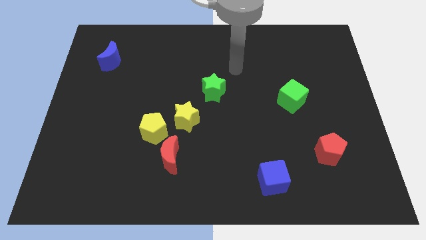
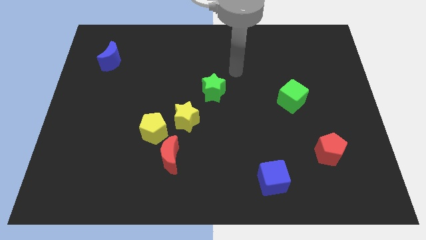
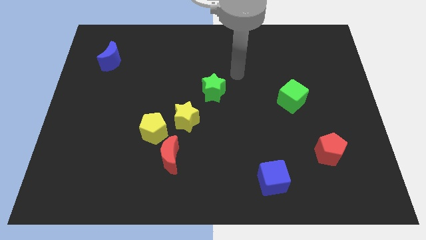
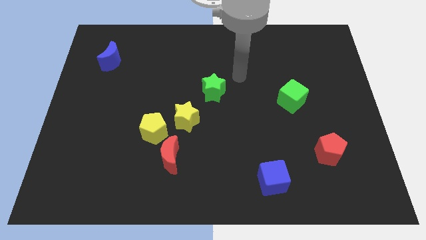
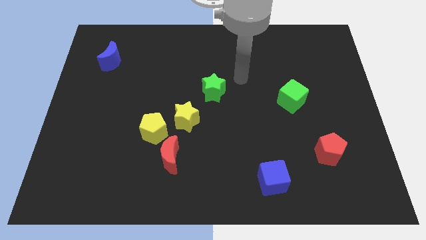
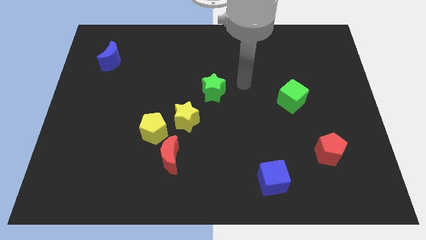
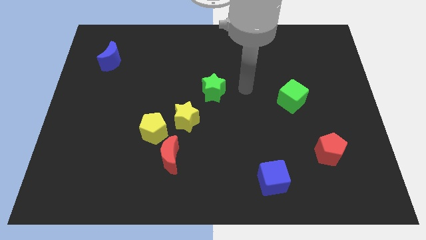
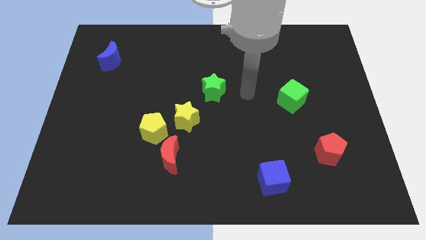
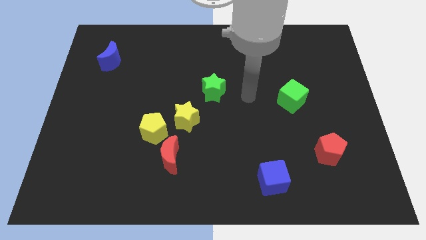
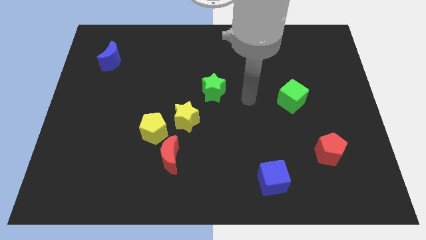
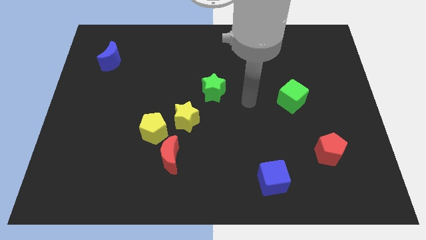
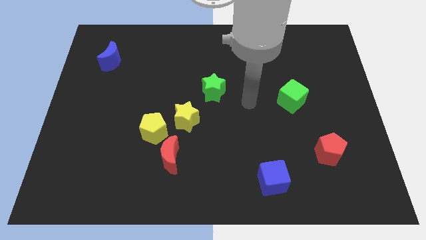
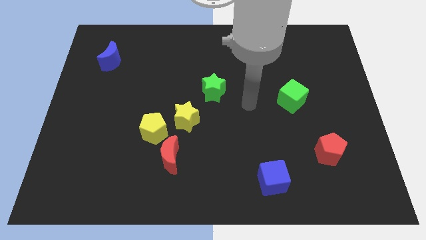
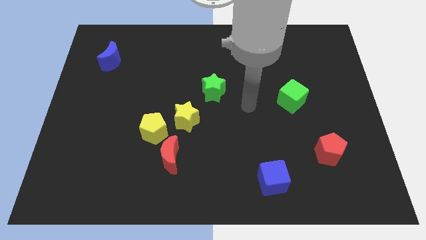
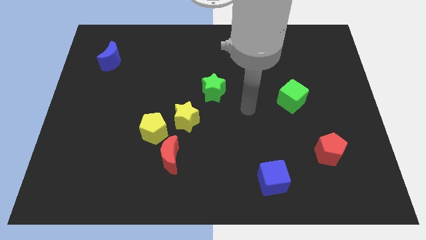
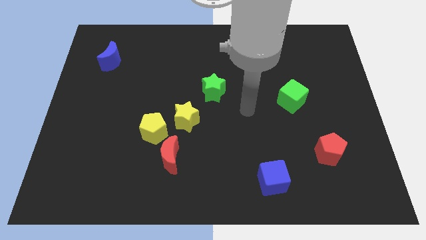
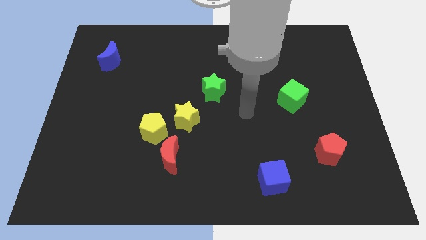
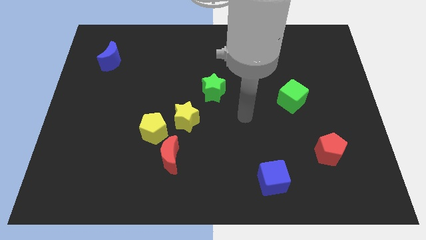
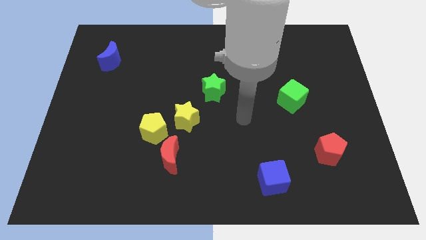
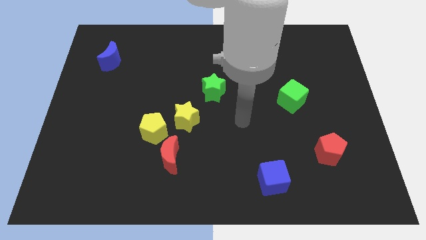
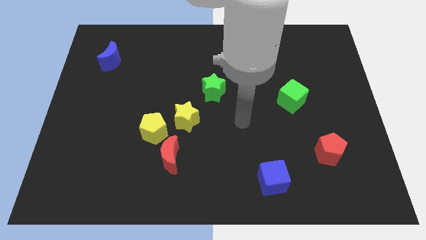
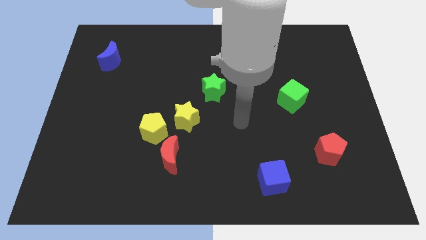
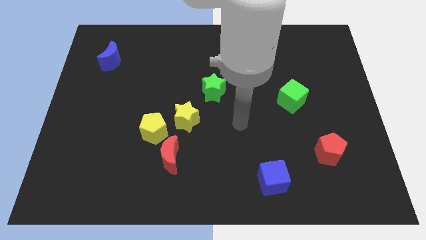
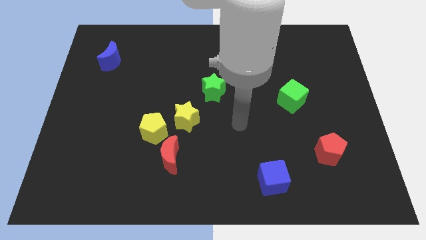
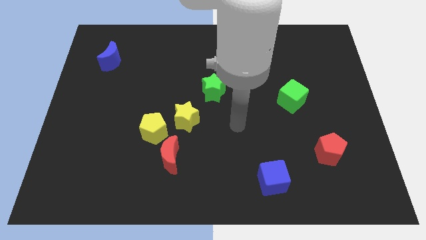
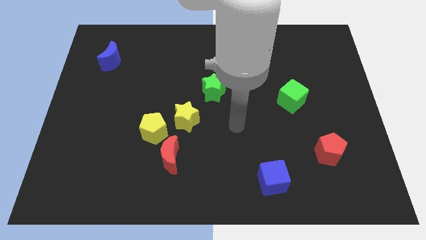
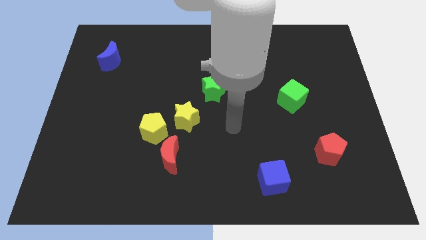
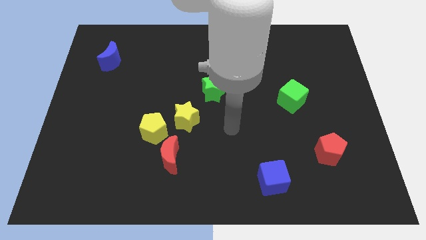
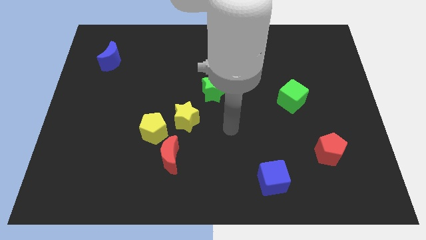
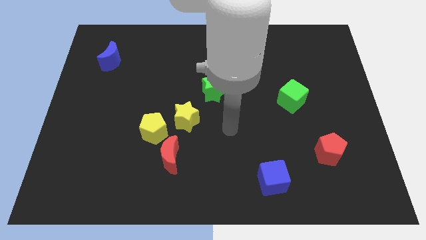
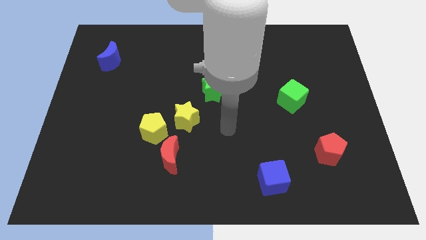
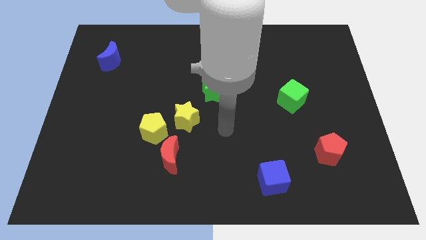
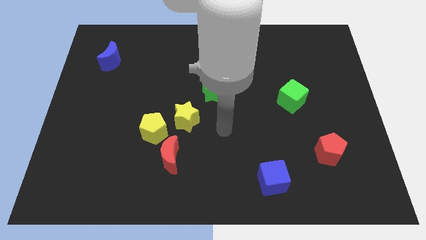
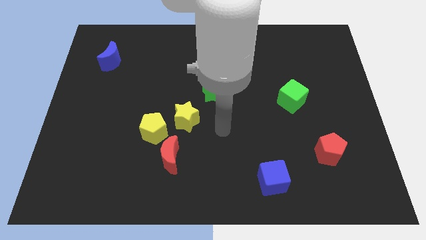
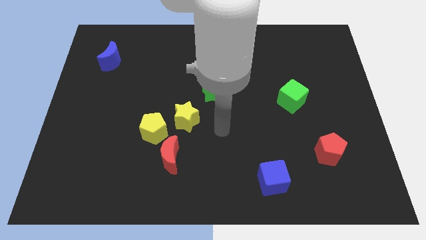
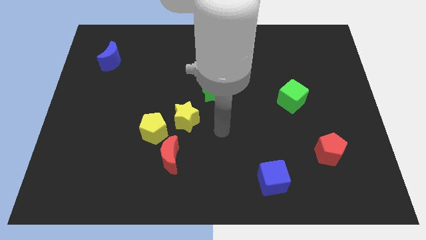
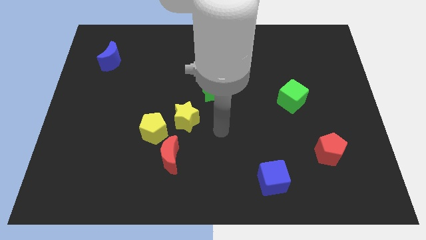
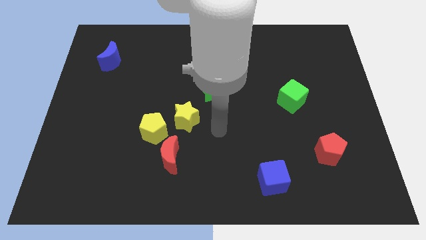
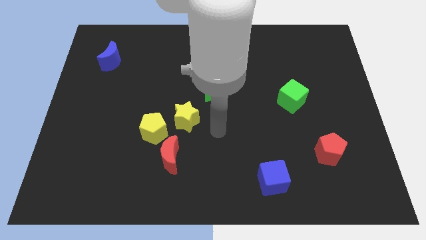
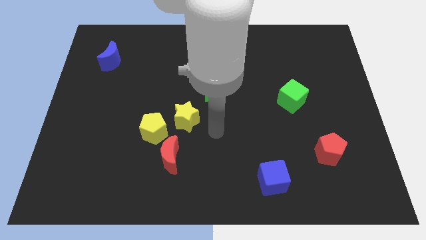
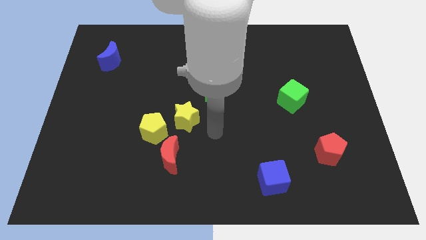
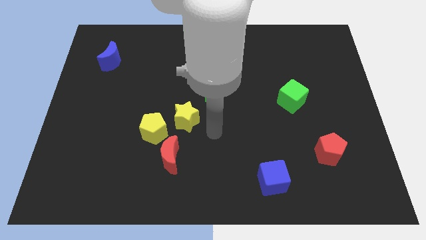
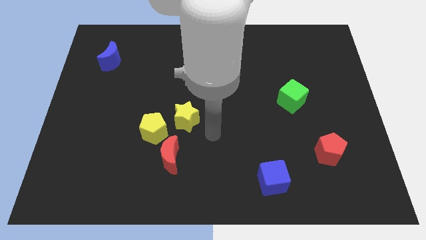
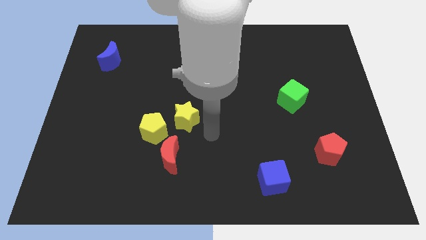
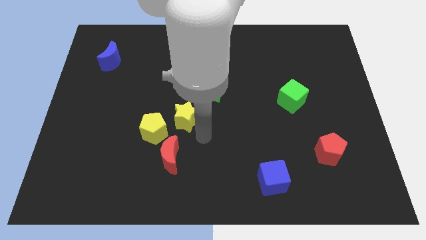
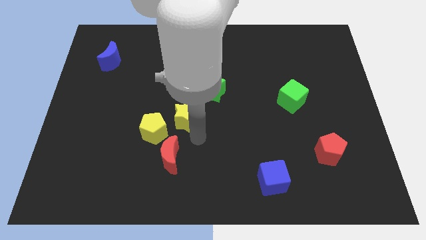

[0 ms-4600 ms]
move your arm towards the yellow star

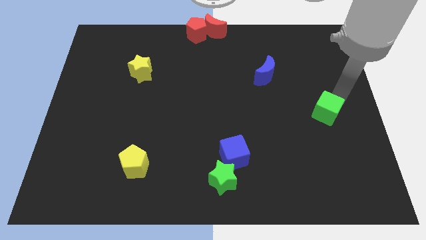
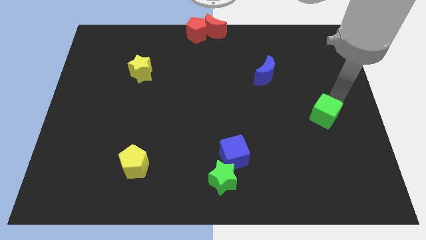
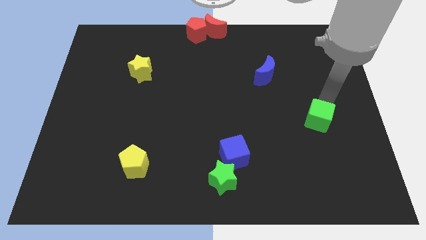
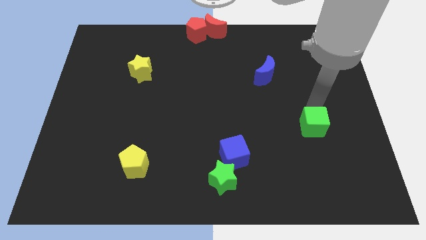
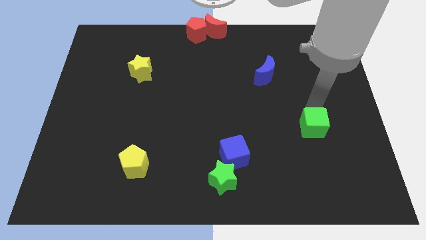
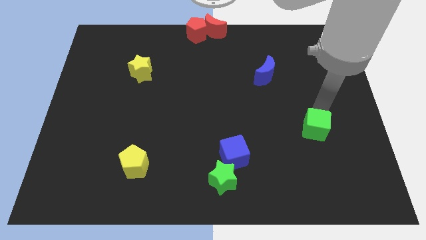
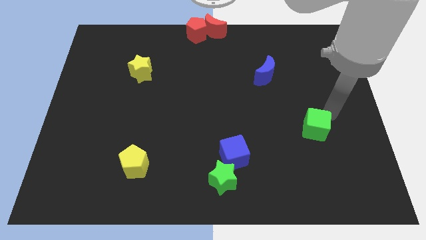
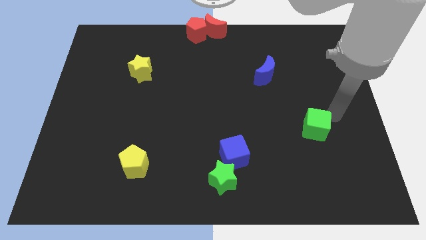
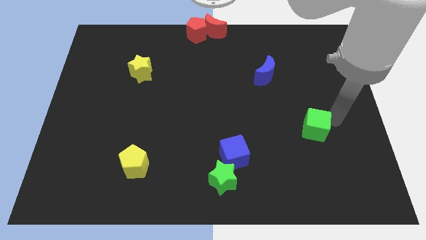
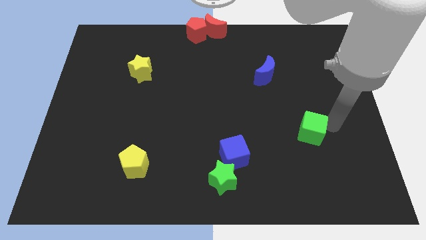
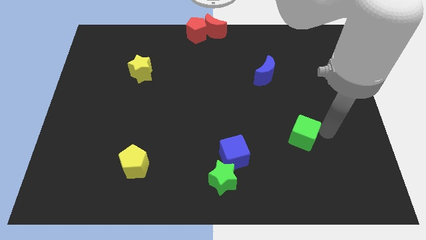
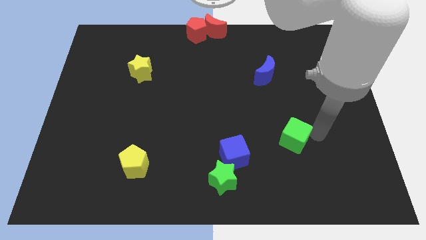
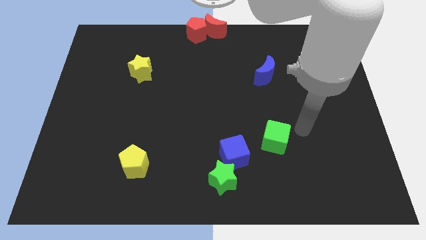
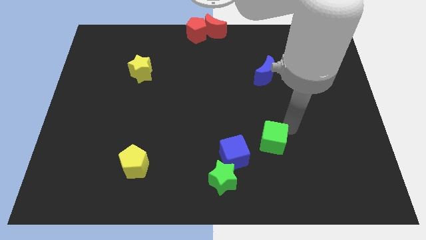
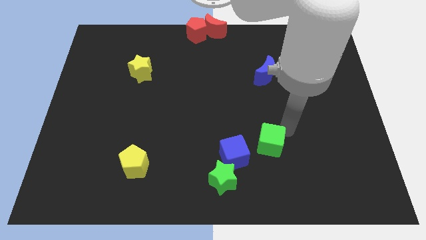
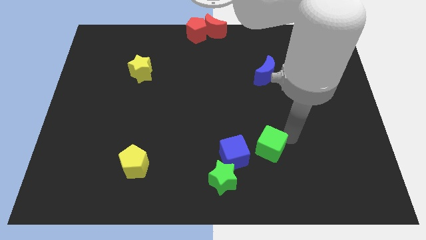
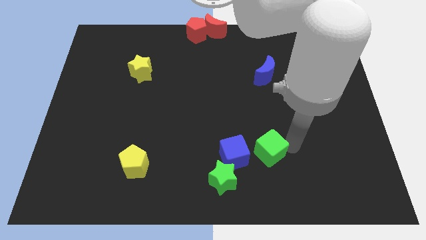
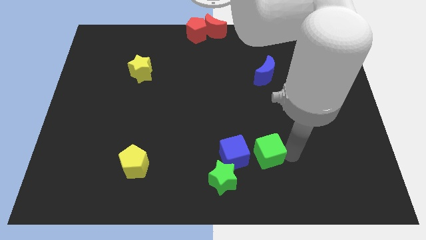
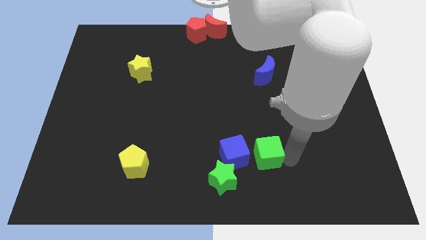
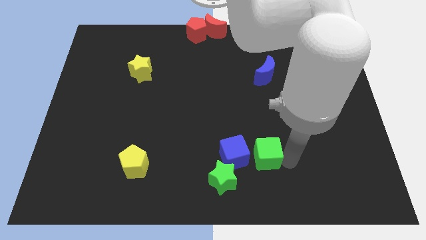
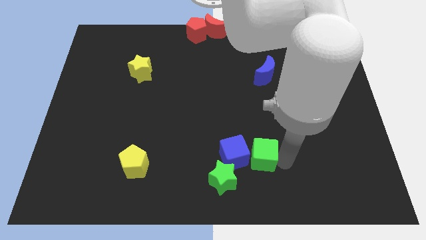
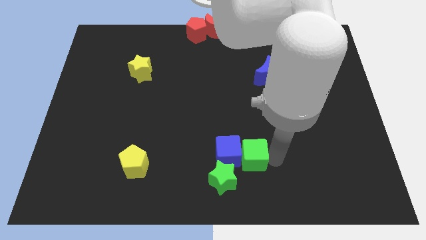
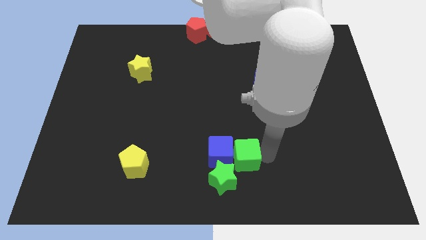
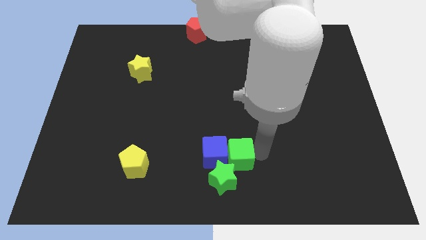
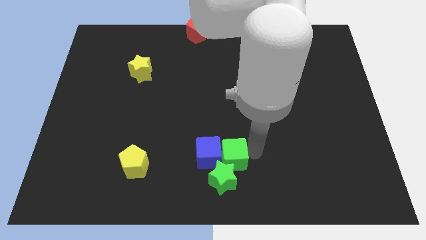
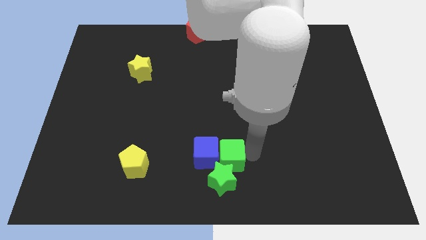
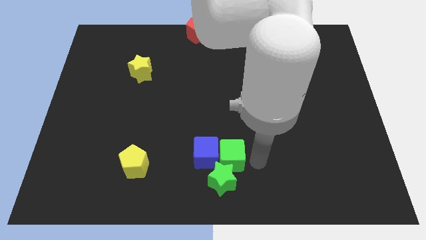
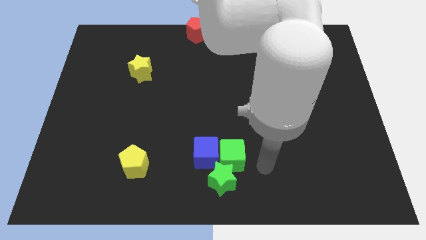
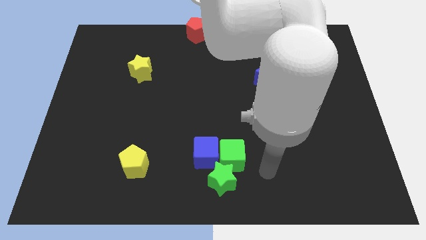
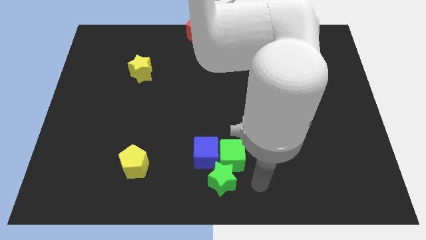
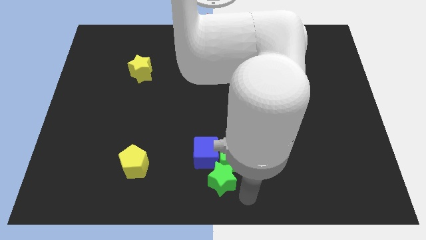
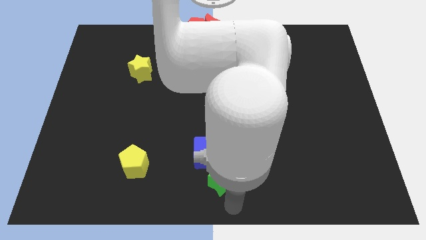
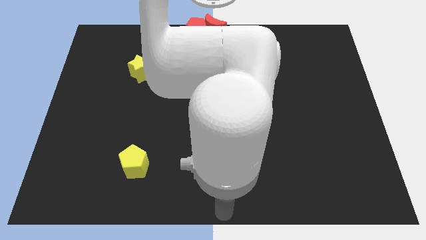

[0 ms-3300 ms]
move green cube into blue cube

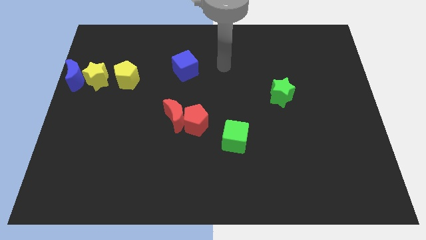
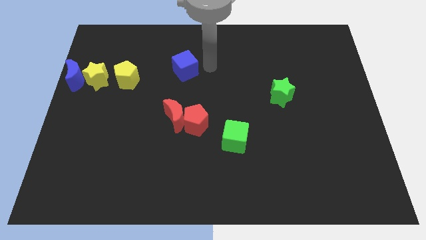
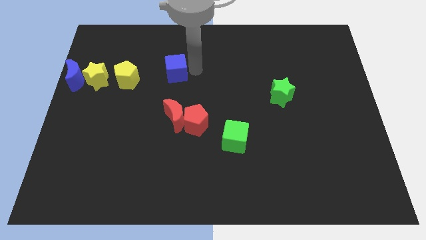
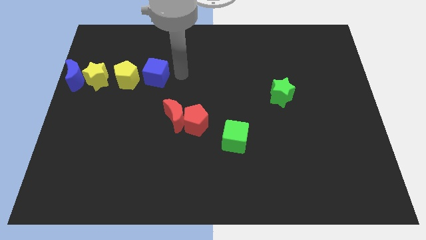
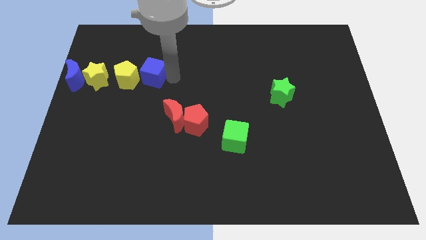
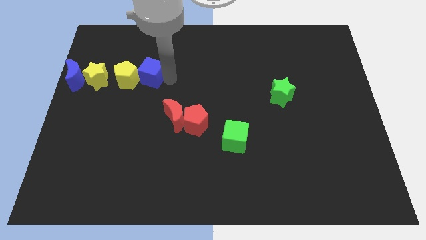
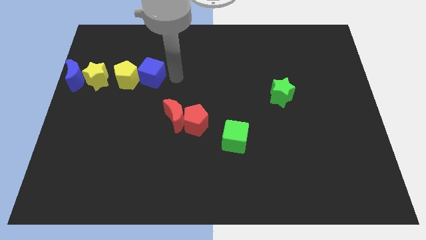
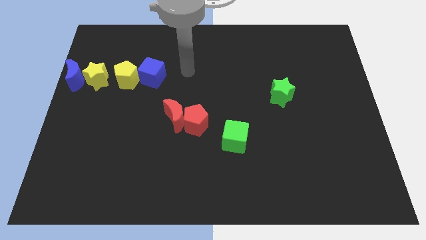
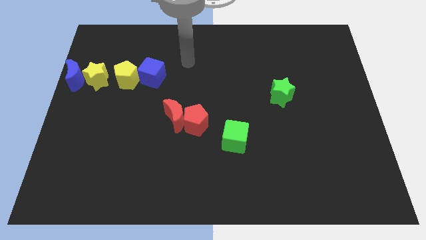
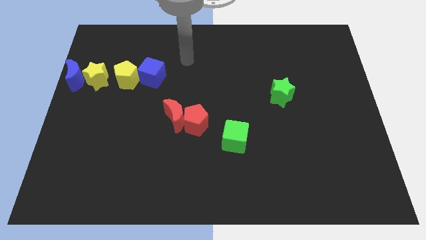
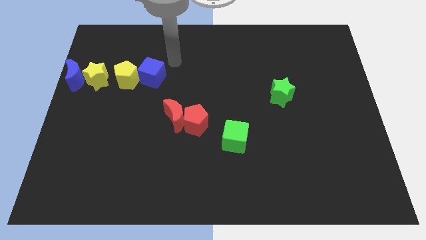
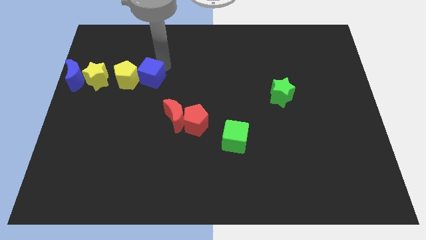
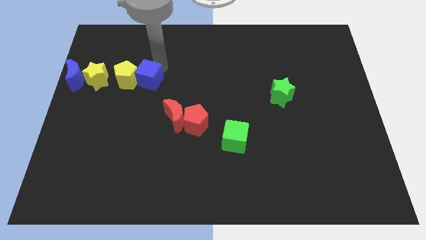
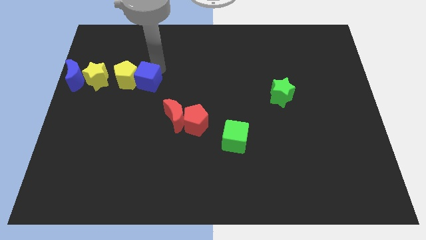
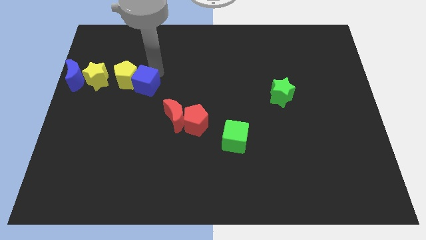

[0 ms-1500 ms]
push the blue cube into the yellow pentagon
